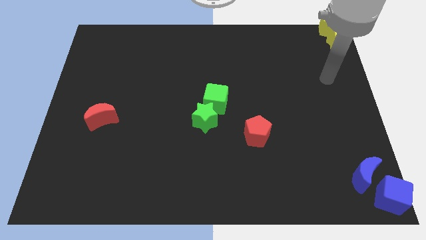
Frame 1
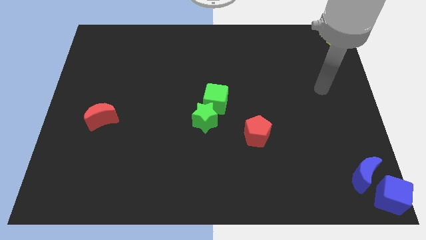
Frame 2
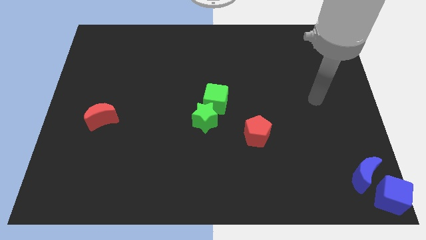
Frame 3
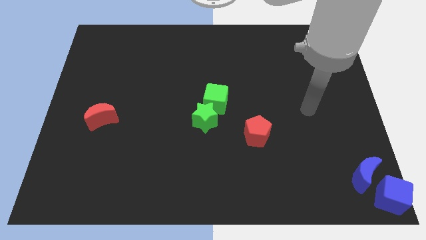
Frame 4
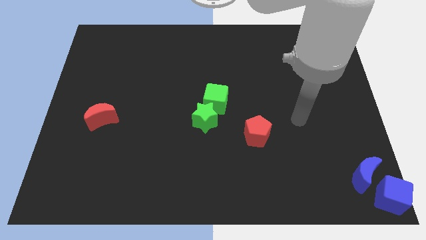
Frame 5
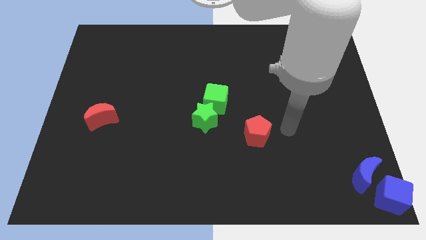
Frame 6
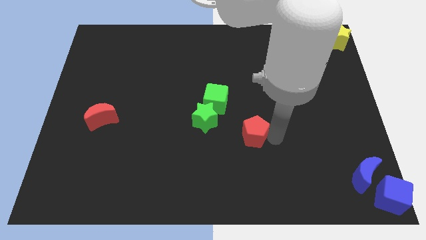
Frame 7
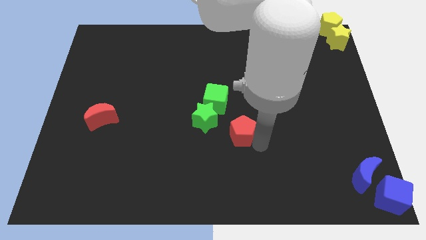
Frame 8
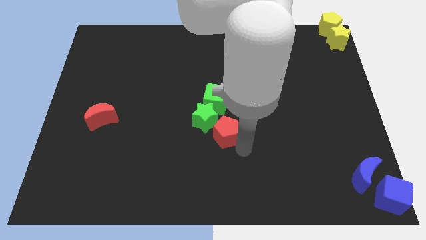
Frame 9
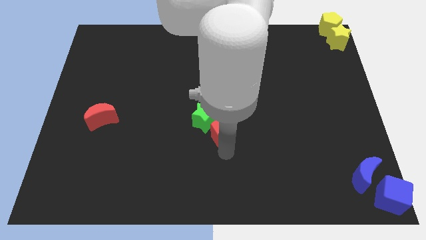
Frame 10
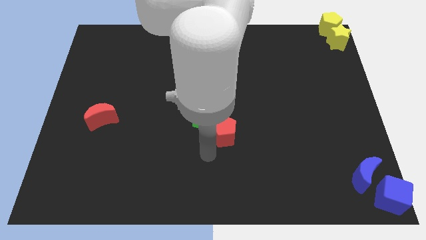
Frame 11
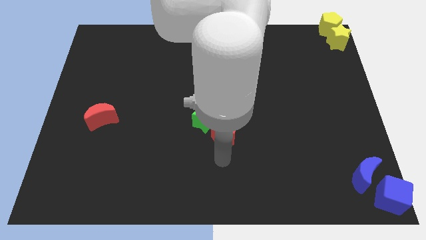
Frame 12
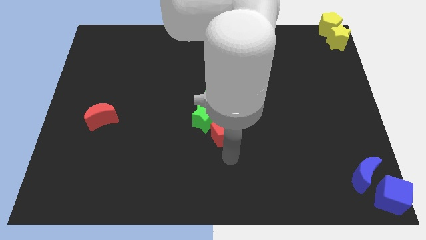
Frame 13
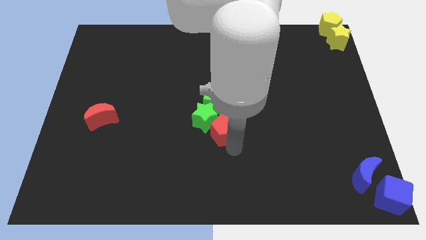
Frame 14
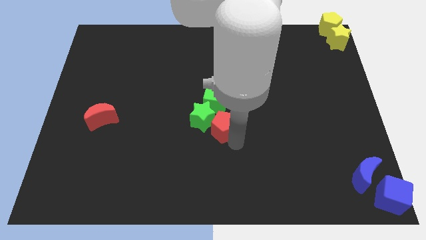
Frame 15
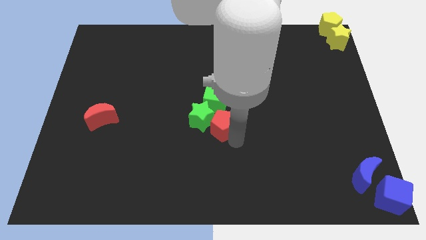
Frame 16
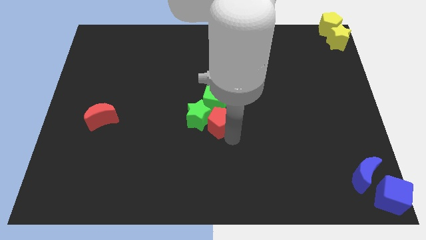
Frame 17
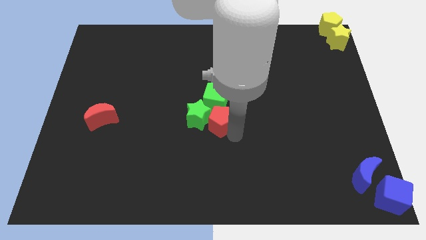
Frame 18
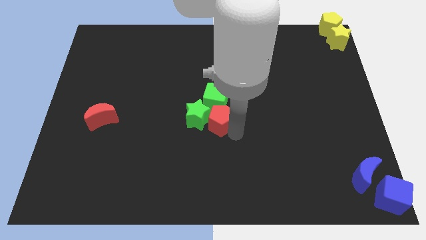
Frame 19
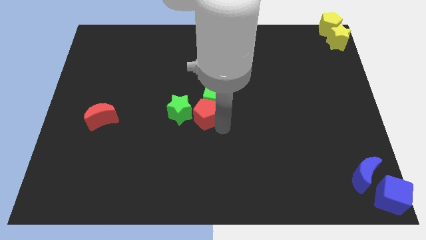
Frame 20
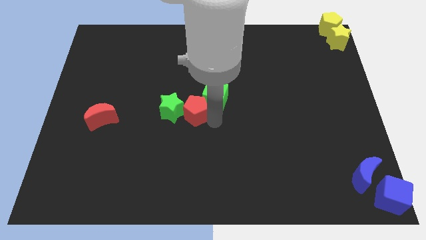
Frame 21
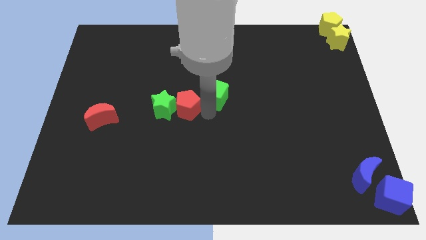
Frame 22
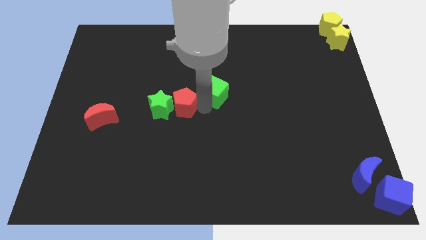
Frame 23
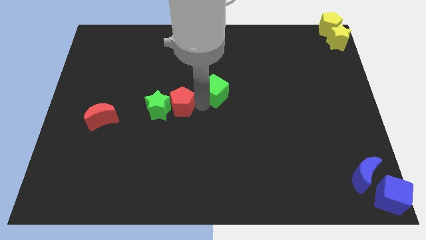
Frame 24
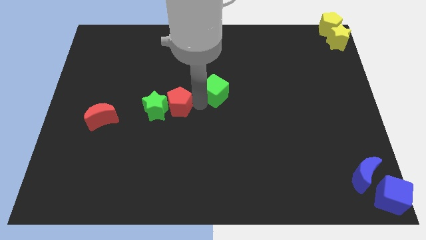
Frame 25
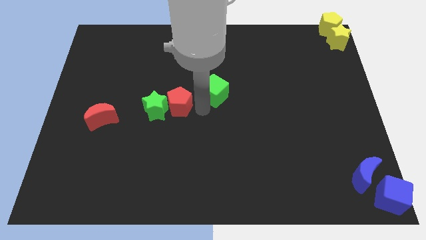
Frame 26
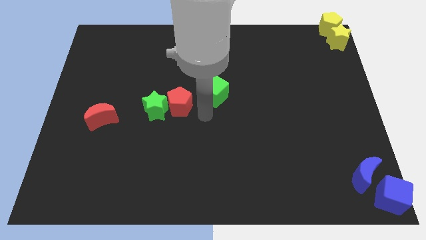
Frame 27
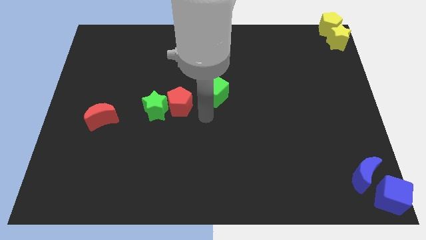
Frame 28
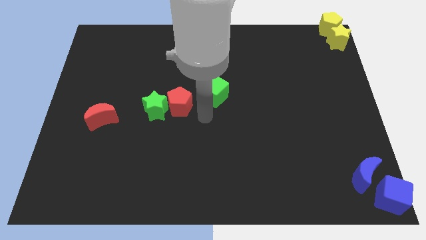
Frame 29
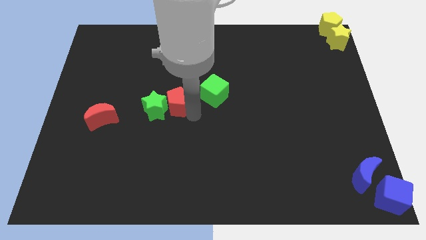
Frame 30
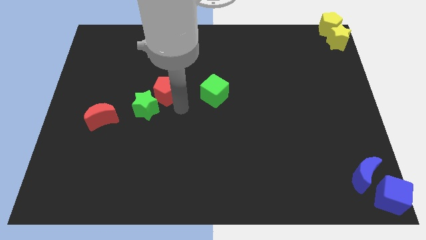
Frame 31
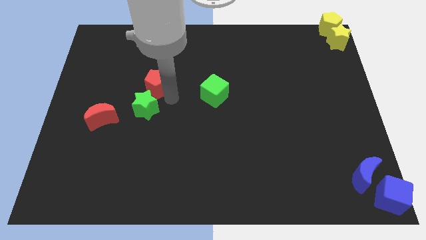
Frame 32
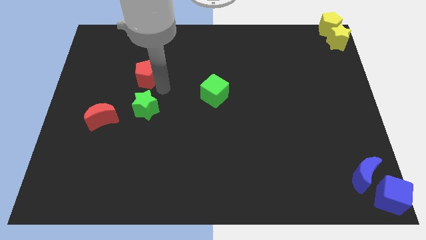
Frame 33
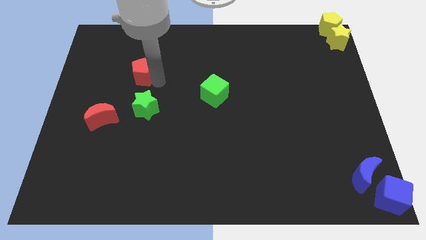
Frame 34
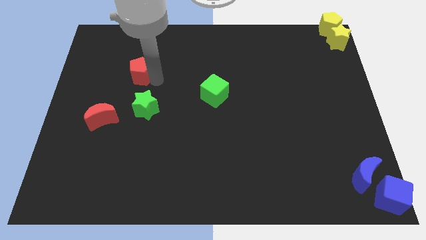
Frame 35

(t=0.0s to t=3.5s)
move red pentagon above green star

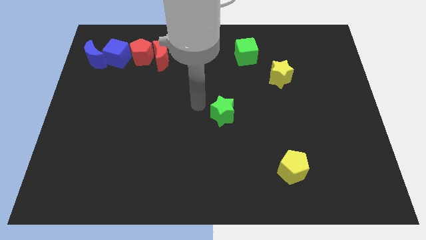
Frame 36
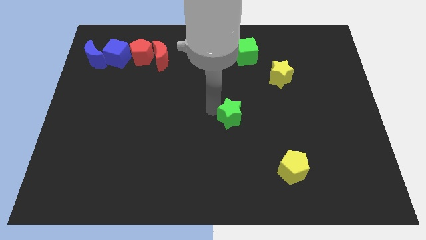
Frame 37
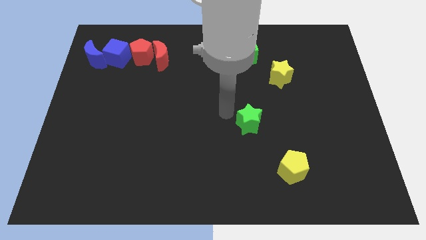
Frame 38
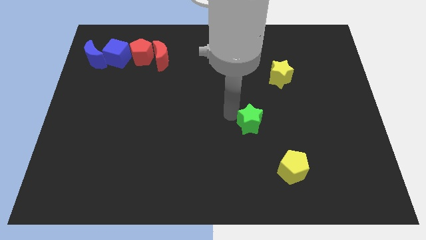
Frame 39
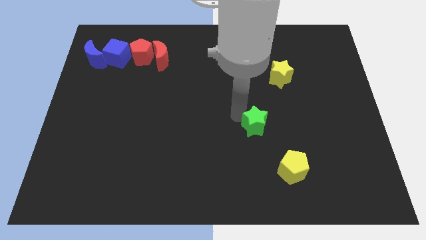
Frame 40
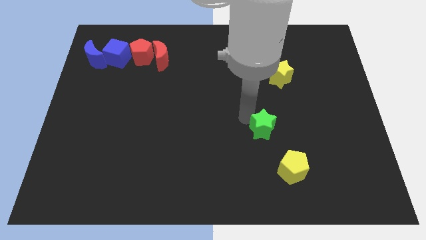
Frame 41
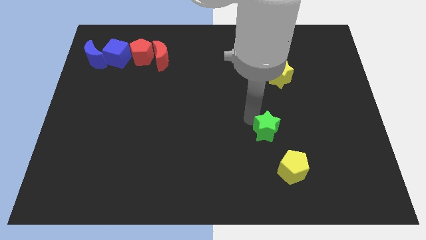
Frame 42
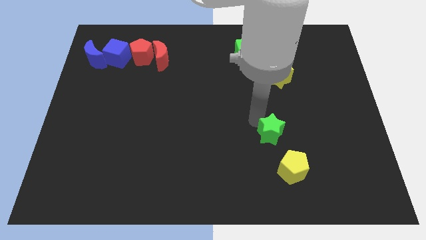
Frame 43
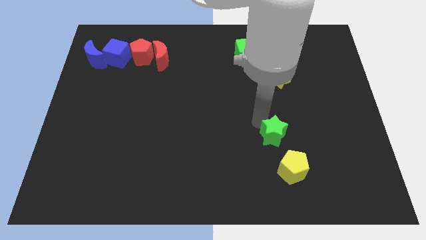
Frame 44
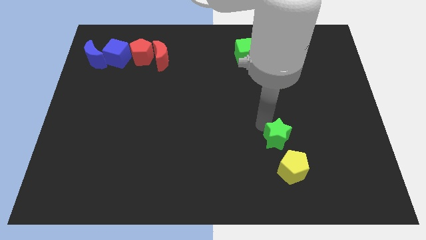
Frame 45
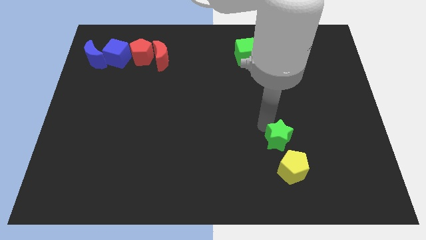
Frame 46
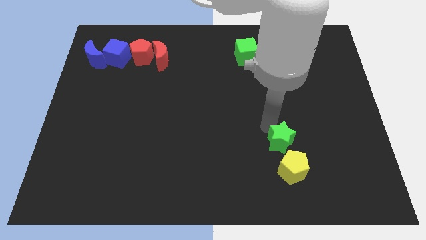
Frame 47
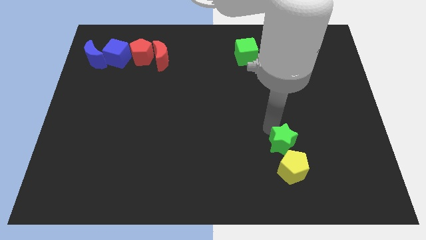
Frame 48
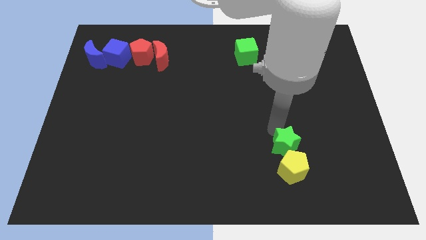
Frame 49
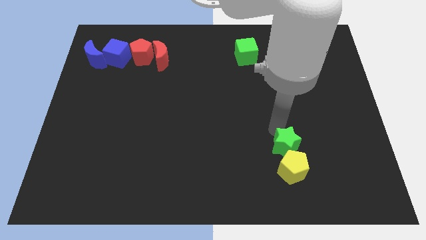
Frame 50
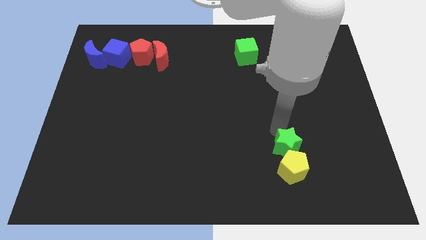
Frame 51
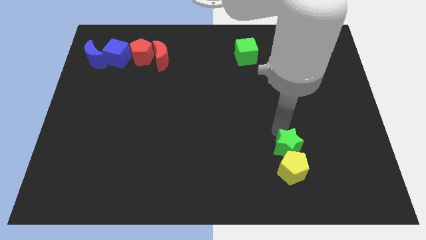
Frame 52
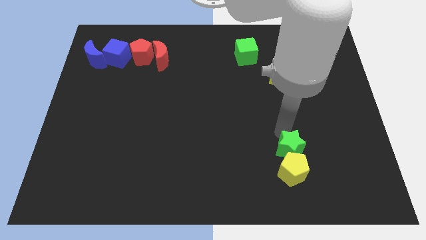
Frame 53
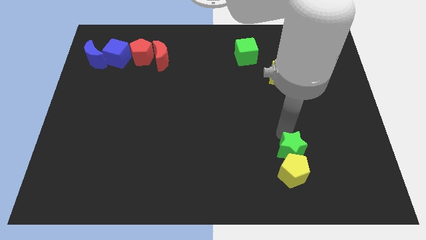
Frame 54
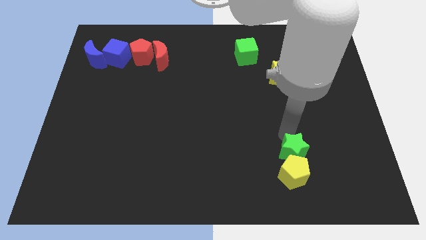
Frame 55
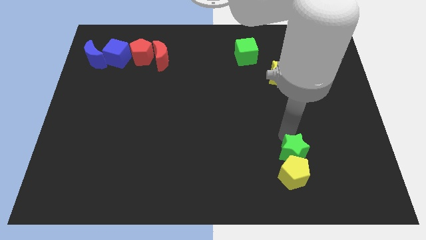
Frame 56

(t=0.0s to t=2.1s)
move the green star to the top side of the yellow pentagon

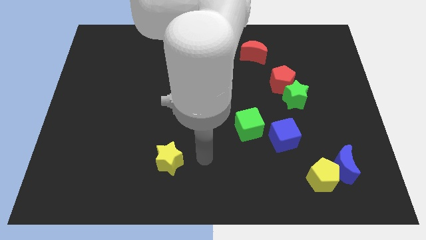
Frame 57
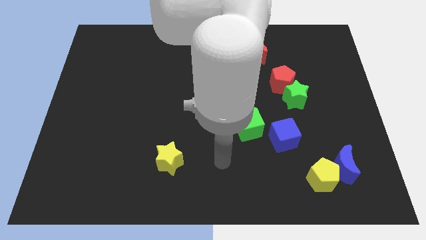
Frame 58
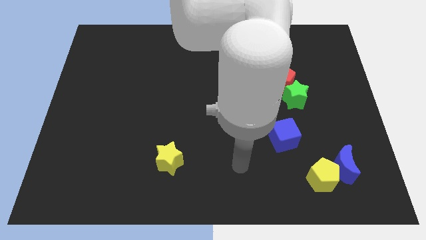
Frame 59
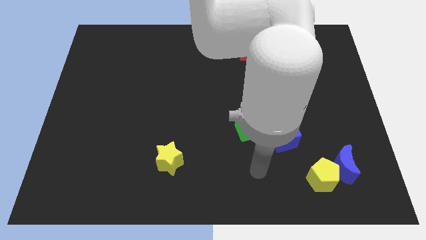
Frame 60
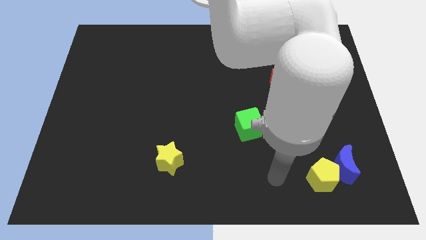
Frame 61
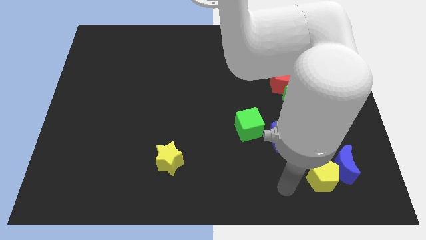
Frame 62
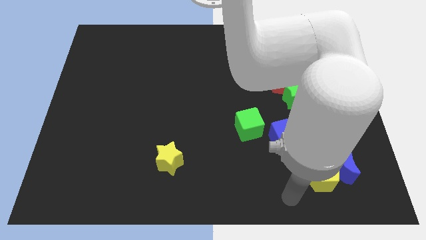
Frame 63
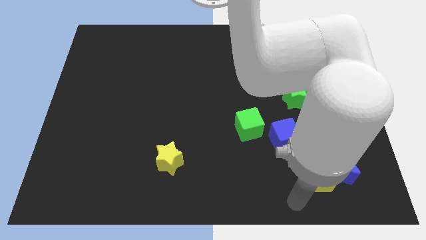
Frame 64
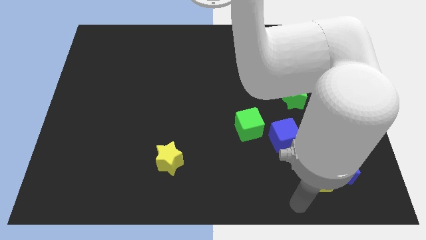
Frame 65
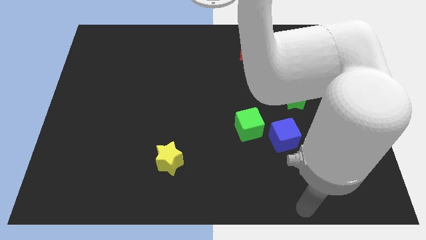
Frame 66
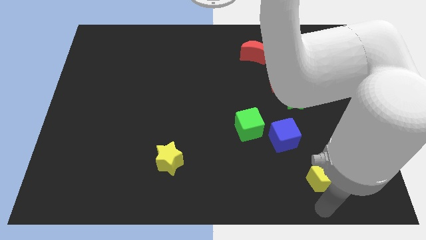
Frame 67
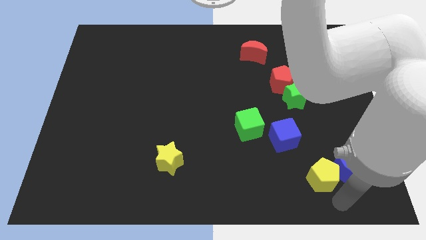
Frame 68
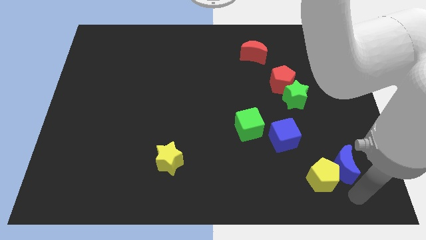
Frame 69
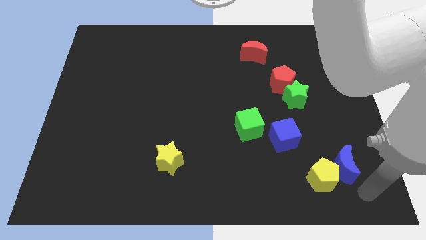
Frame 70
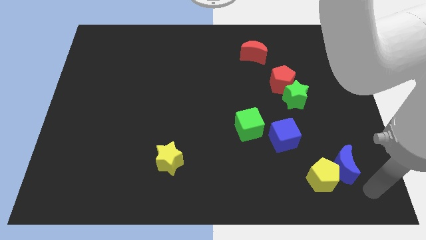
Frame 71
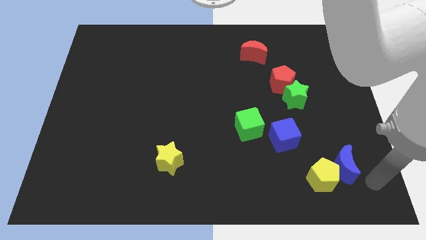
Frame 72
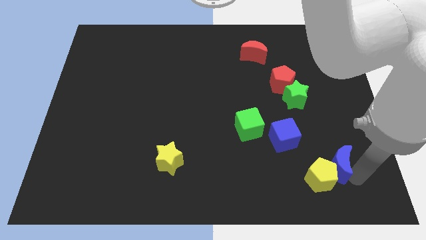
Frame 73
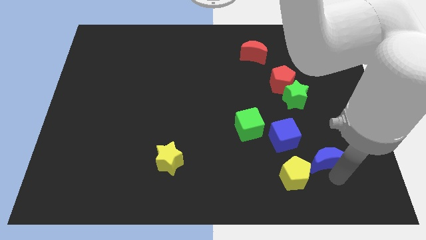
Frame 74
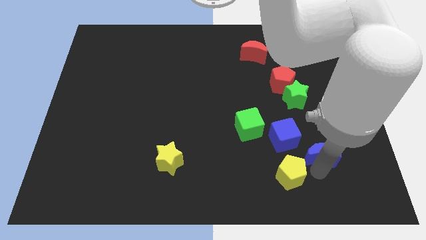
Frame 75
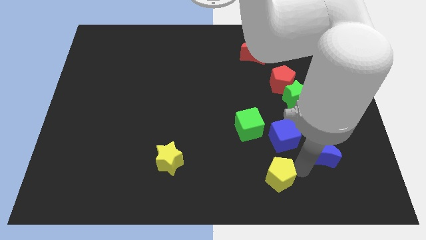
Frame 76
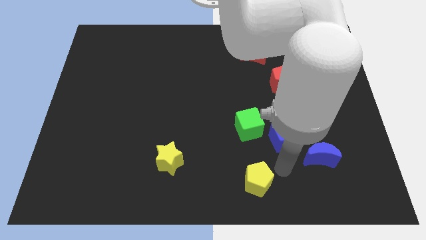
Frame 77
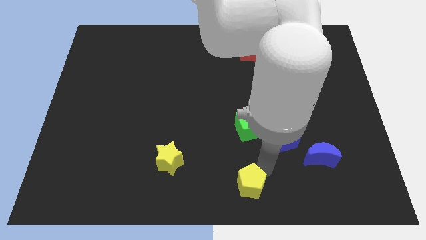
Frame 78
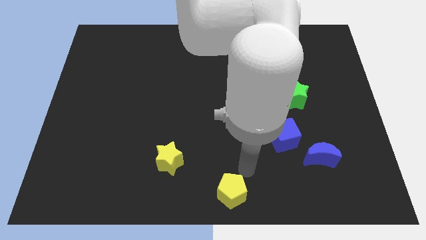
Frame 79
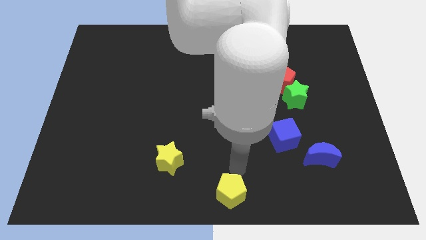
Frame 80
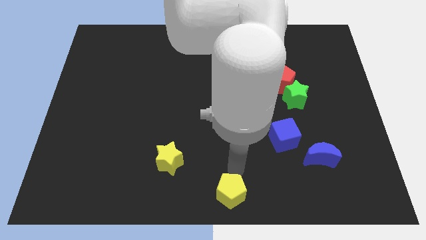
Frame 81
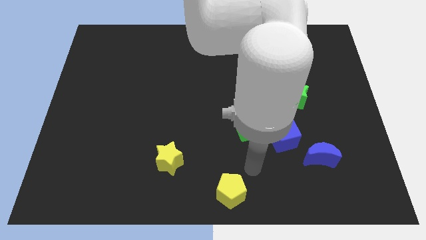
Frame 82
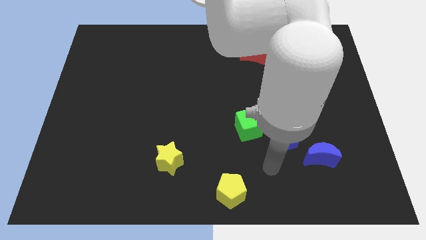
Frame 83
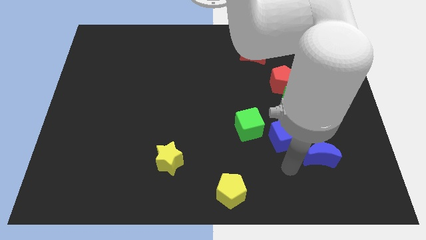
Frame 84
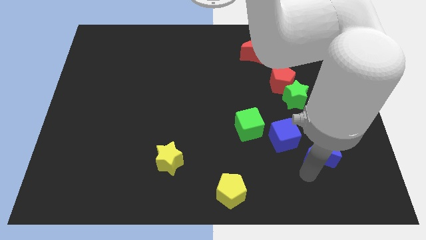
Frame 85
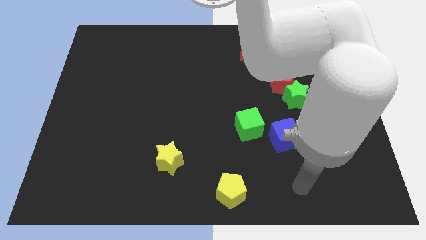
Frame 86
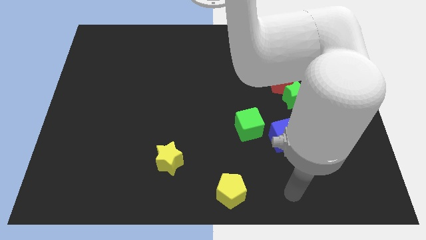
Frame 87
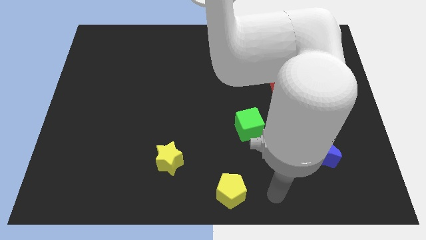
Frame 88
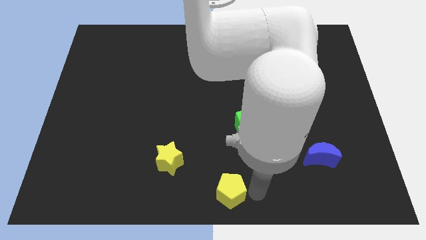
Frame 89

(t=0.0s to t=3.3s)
separate the yellow pentagon from the blue moon

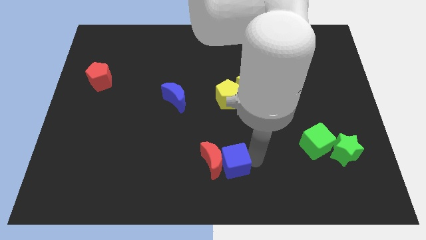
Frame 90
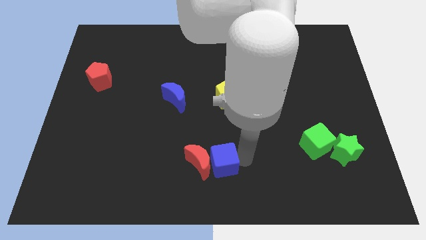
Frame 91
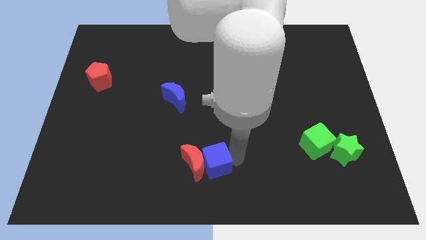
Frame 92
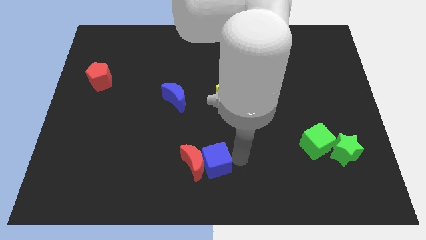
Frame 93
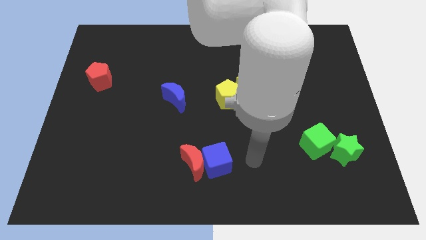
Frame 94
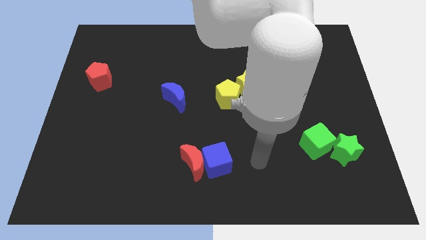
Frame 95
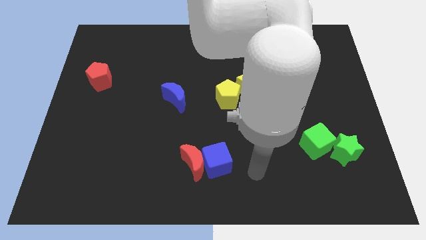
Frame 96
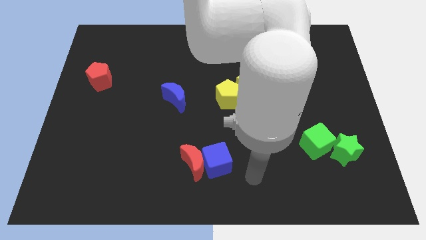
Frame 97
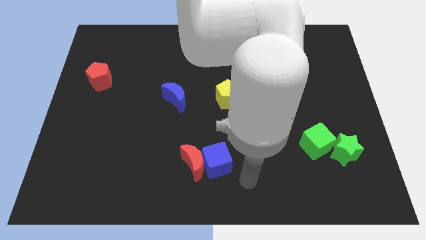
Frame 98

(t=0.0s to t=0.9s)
push the blue cube slightly to the bottom center along with the red crescent
